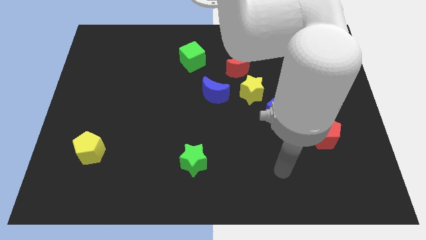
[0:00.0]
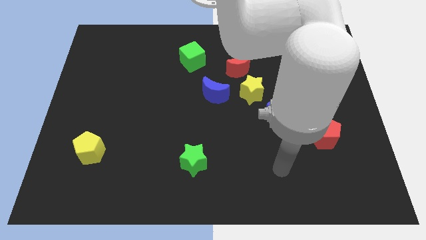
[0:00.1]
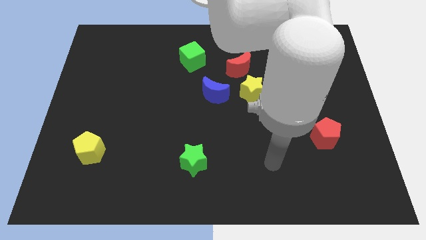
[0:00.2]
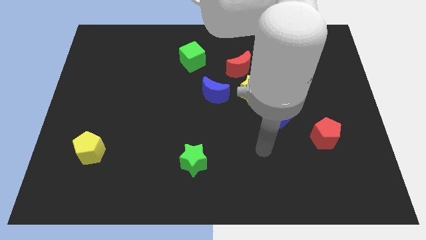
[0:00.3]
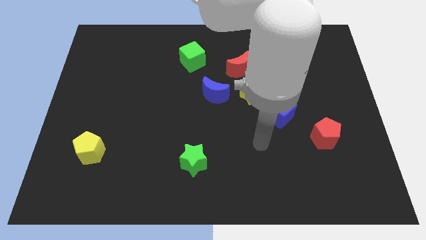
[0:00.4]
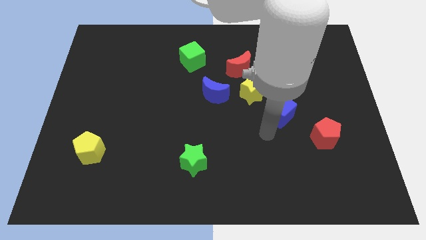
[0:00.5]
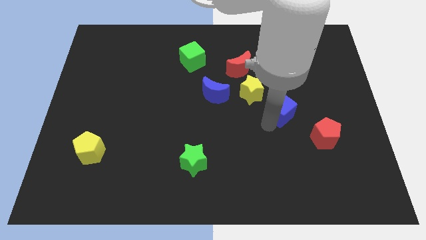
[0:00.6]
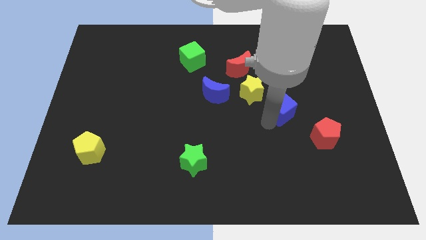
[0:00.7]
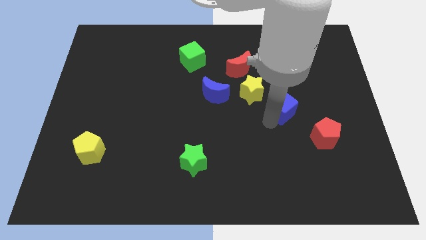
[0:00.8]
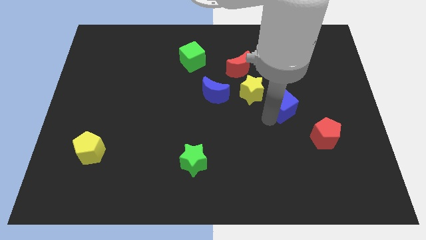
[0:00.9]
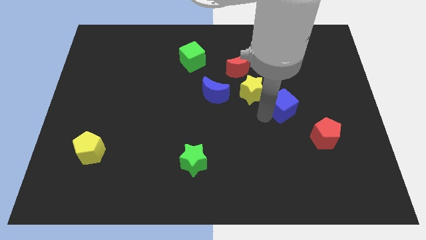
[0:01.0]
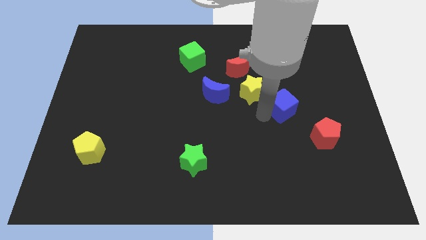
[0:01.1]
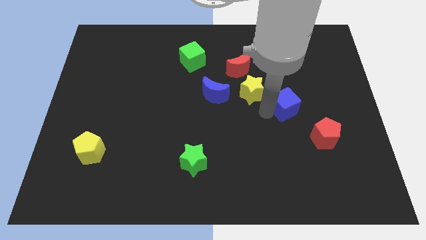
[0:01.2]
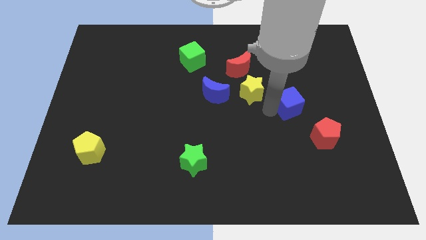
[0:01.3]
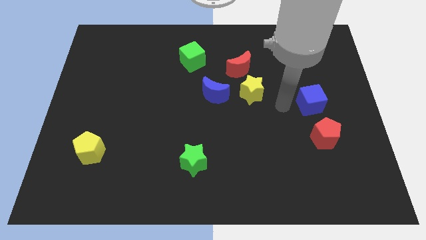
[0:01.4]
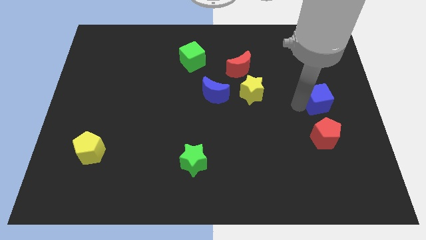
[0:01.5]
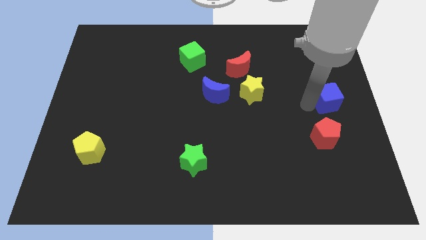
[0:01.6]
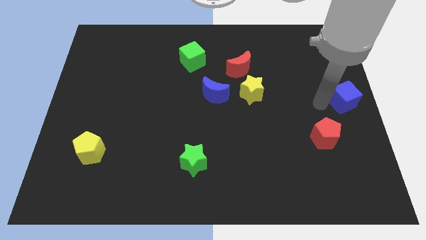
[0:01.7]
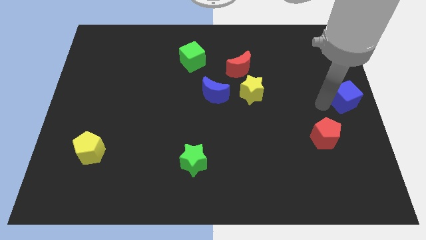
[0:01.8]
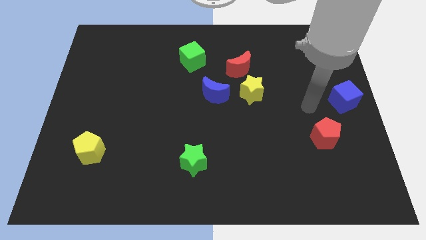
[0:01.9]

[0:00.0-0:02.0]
move the blue cube center right

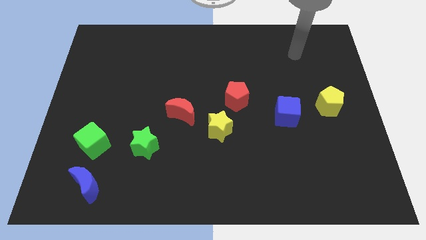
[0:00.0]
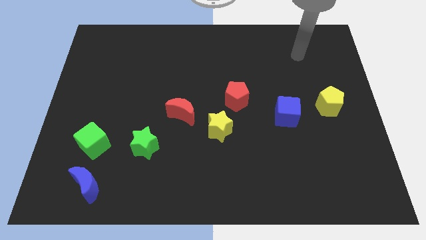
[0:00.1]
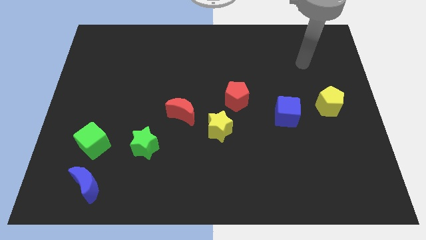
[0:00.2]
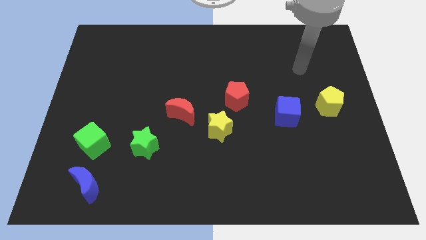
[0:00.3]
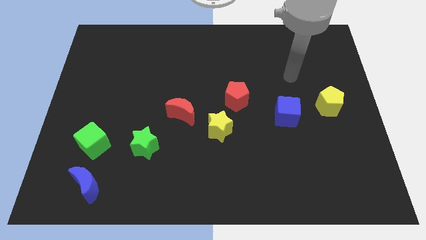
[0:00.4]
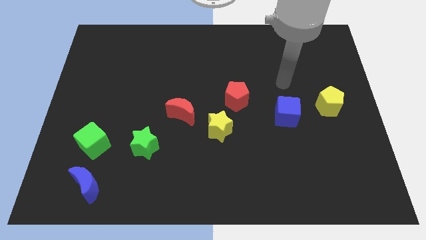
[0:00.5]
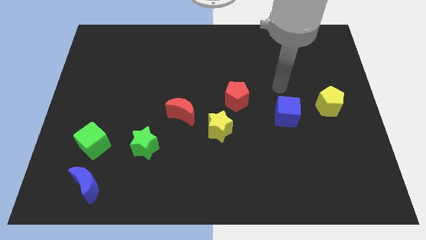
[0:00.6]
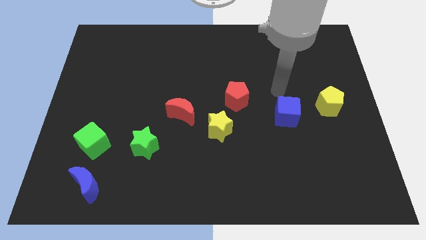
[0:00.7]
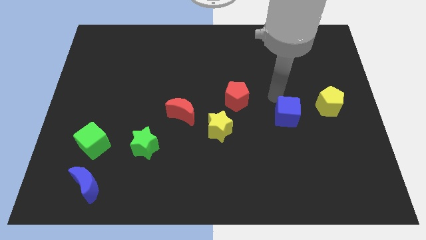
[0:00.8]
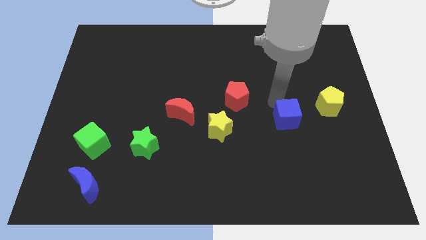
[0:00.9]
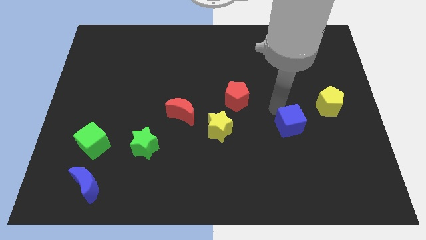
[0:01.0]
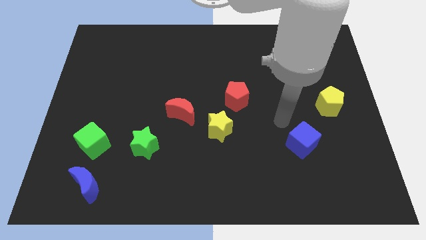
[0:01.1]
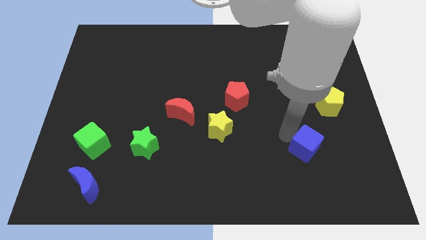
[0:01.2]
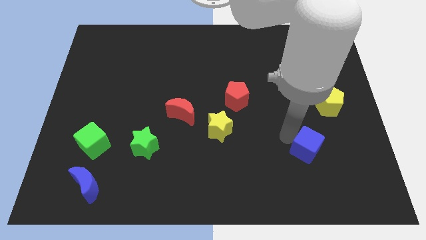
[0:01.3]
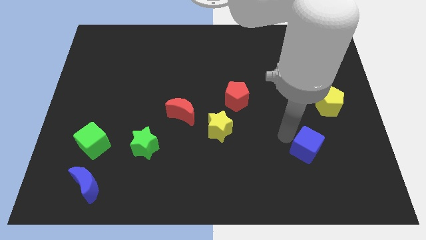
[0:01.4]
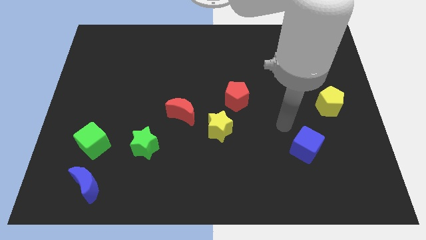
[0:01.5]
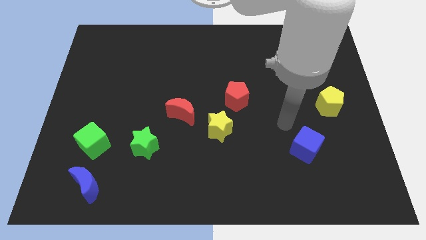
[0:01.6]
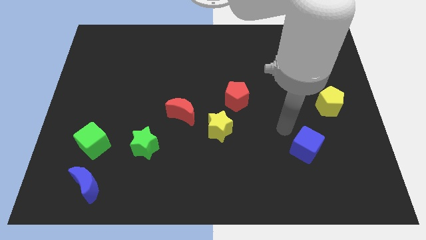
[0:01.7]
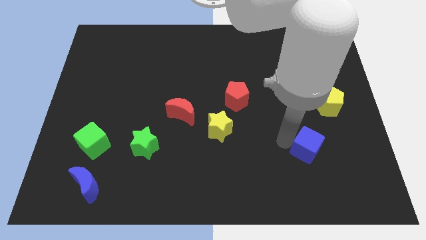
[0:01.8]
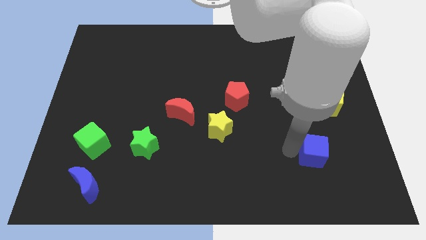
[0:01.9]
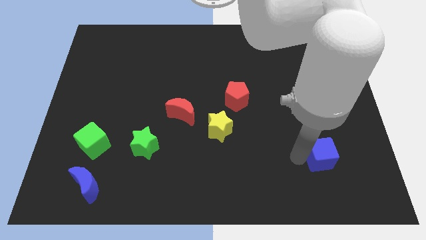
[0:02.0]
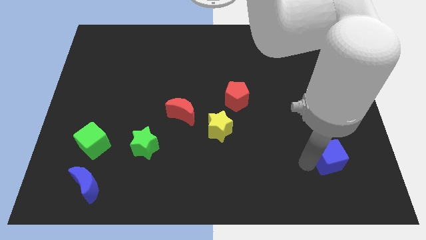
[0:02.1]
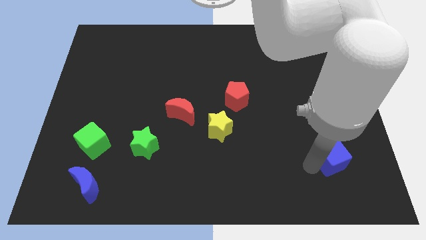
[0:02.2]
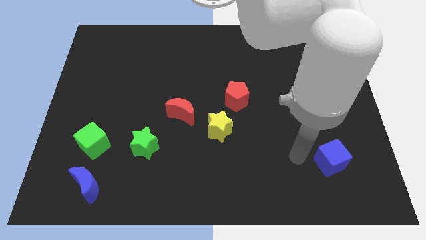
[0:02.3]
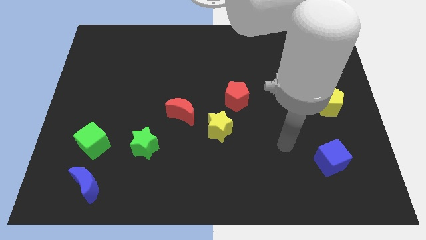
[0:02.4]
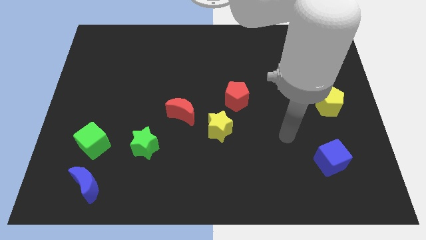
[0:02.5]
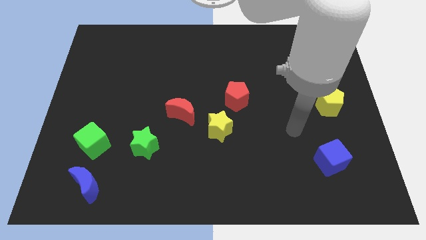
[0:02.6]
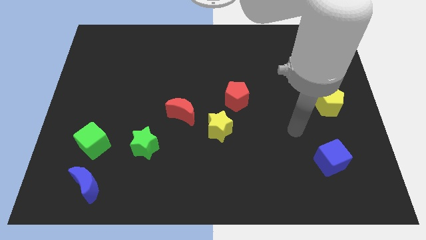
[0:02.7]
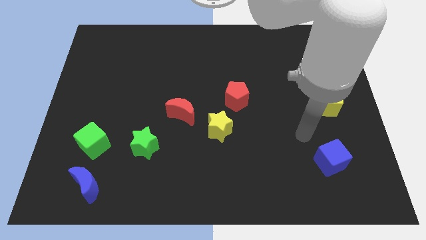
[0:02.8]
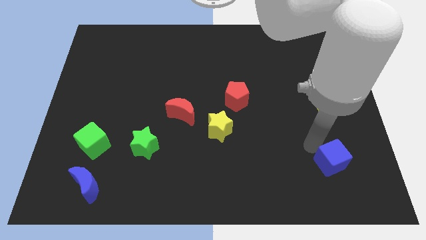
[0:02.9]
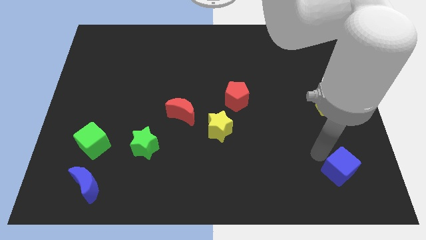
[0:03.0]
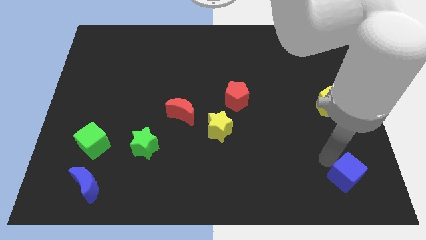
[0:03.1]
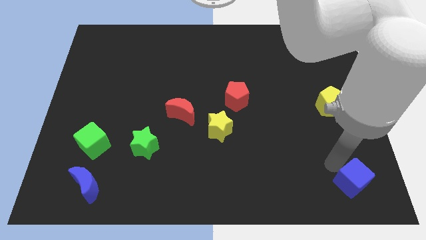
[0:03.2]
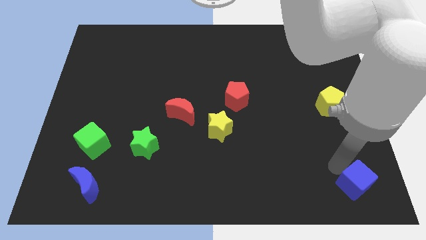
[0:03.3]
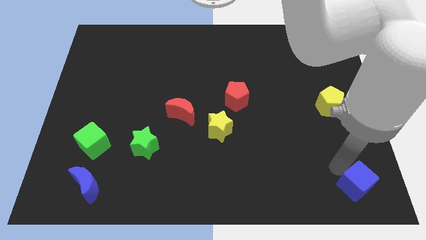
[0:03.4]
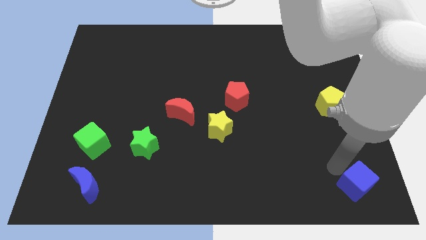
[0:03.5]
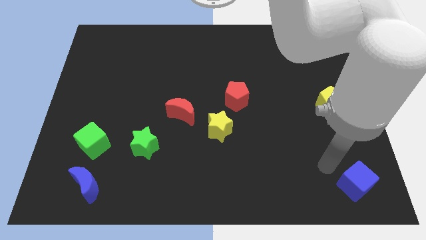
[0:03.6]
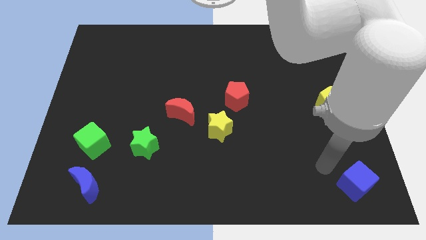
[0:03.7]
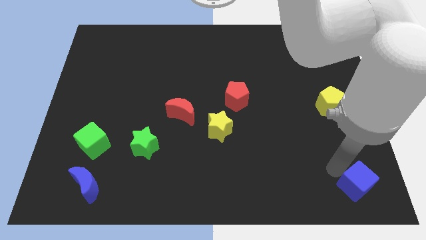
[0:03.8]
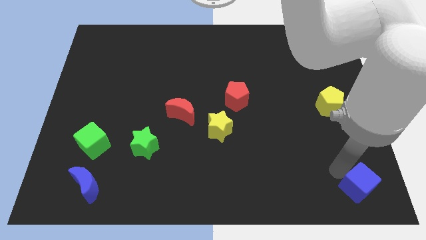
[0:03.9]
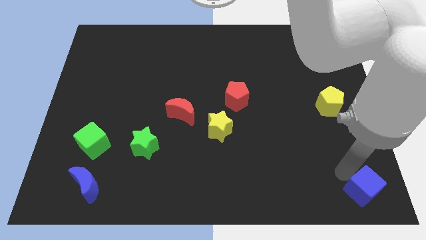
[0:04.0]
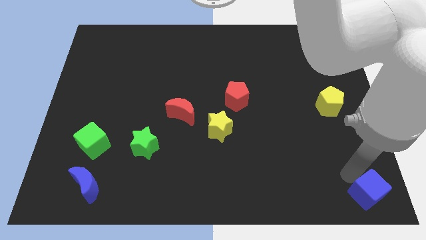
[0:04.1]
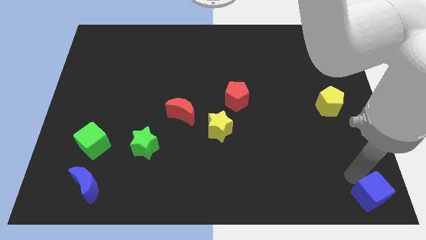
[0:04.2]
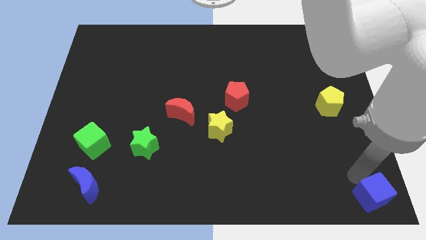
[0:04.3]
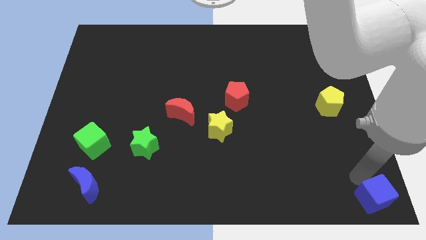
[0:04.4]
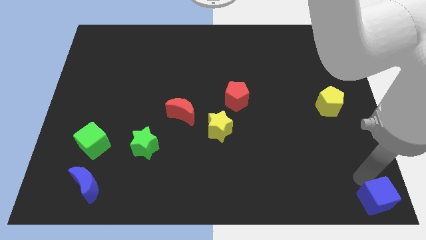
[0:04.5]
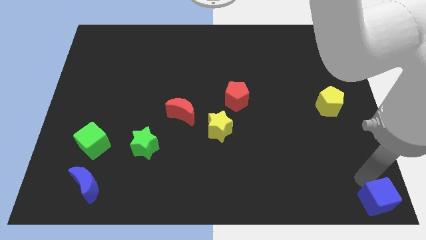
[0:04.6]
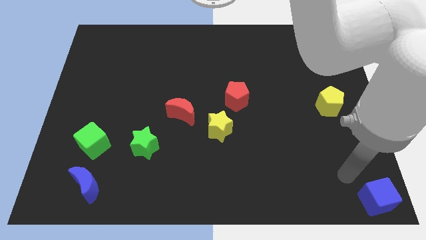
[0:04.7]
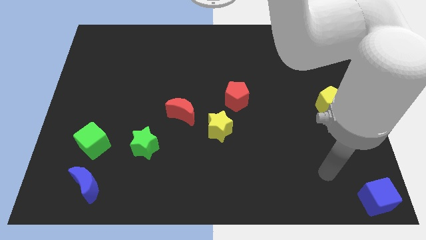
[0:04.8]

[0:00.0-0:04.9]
place the blue cube at the bottom right corner of the board

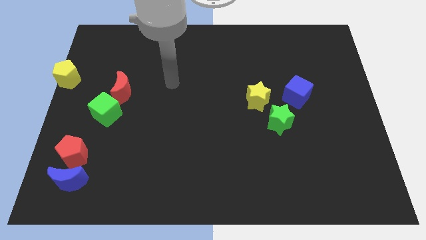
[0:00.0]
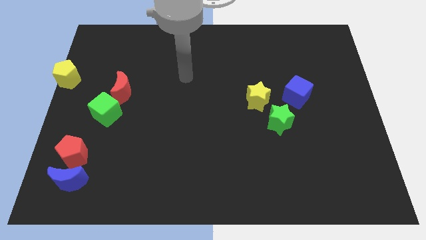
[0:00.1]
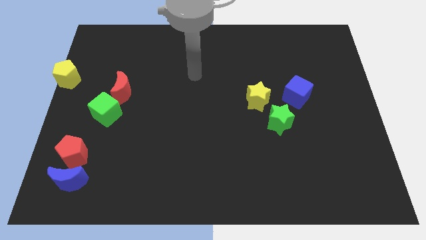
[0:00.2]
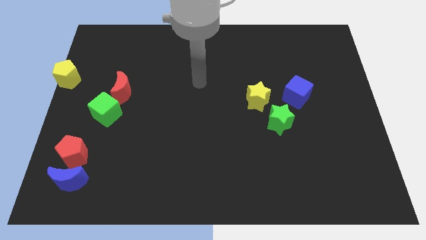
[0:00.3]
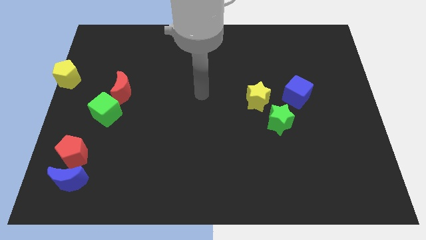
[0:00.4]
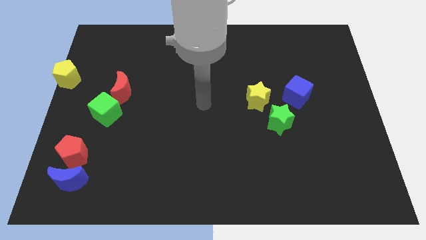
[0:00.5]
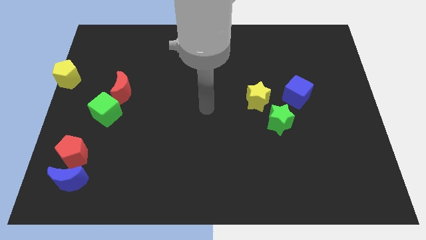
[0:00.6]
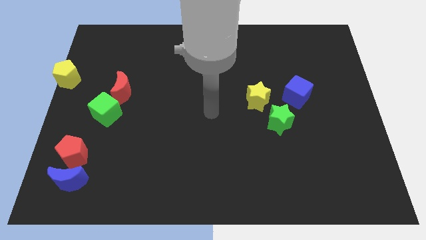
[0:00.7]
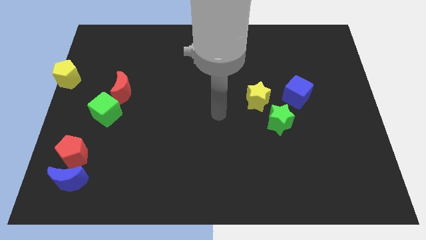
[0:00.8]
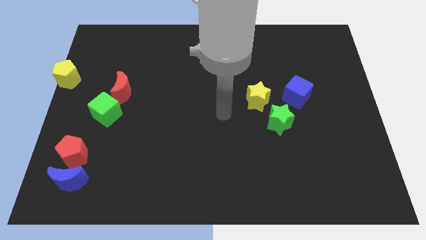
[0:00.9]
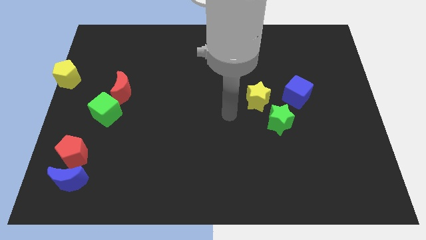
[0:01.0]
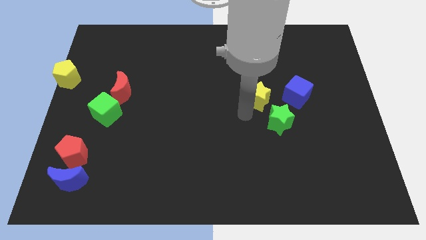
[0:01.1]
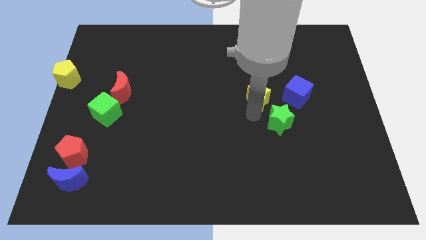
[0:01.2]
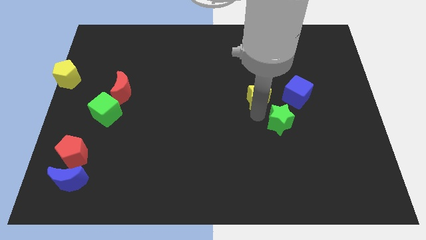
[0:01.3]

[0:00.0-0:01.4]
point your arm at the bottom of the yellow star

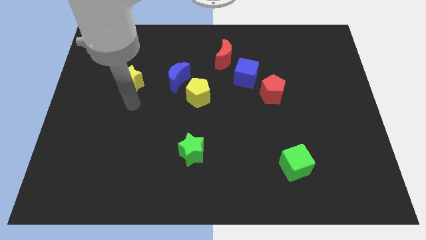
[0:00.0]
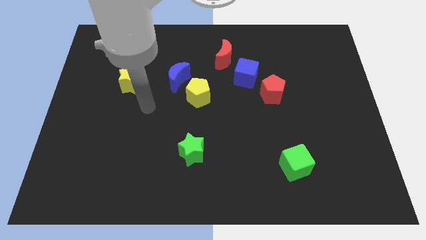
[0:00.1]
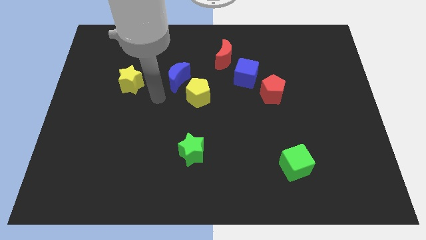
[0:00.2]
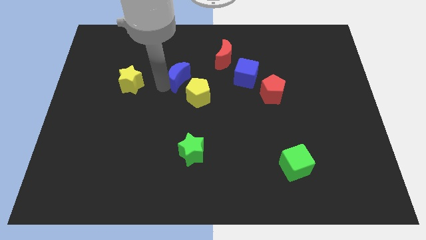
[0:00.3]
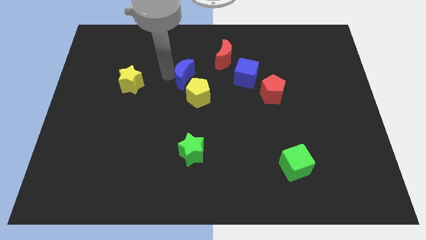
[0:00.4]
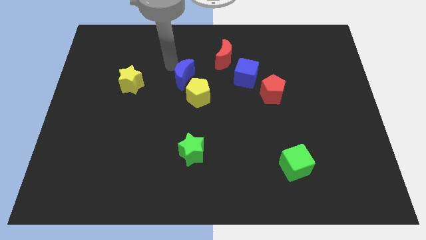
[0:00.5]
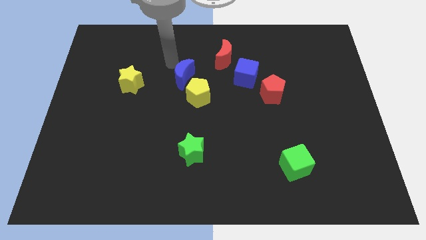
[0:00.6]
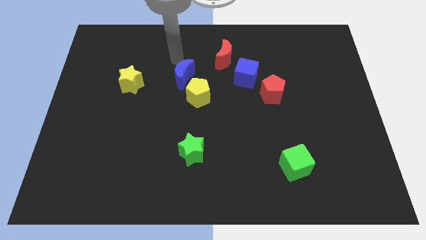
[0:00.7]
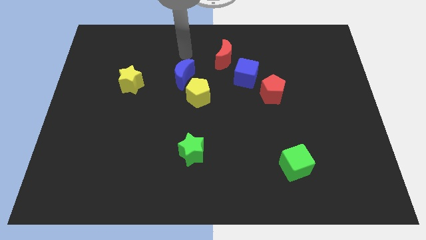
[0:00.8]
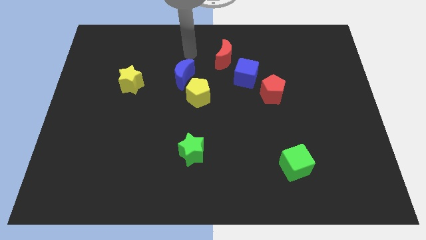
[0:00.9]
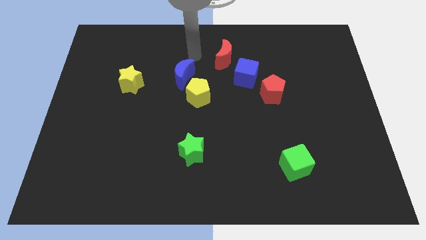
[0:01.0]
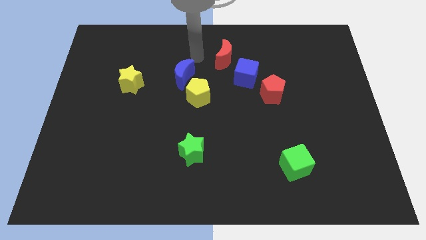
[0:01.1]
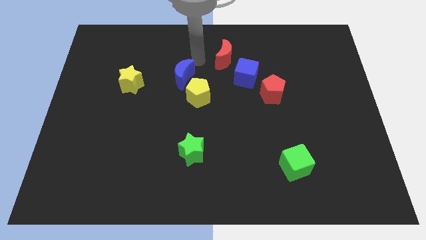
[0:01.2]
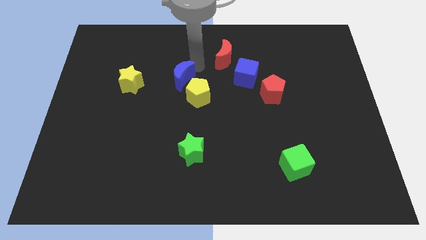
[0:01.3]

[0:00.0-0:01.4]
move your arm towards the top of blue crescent
